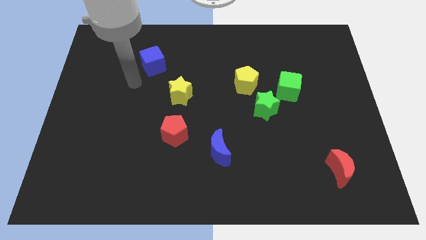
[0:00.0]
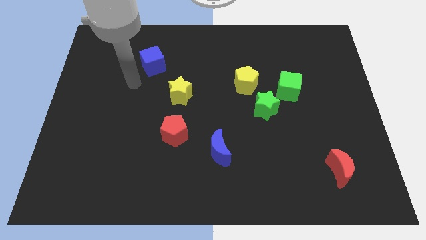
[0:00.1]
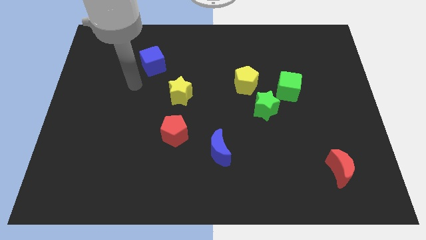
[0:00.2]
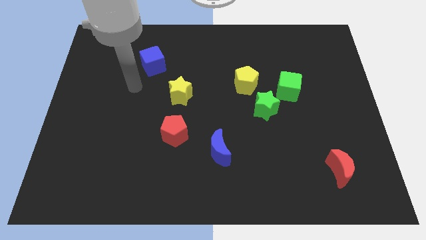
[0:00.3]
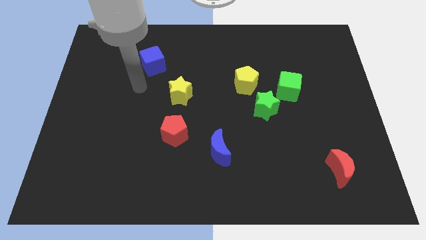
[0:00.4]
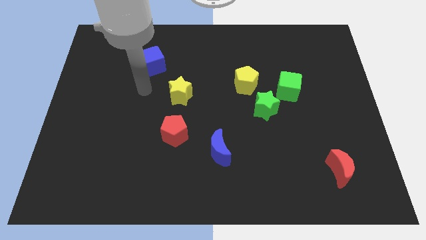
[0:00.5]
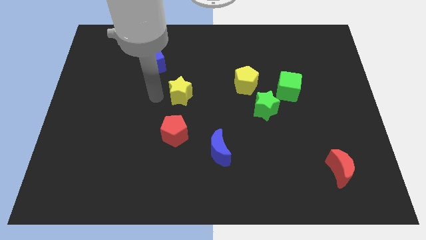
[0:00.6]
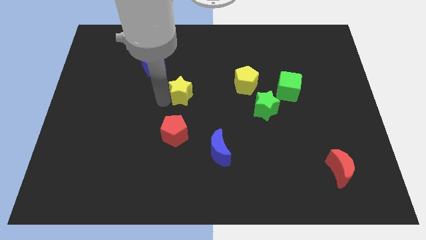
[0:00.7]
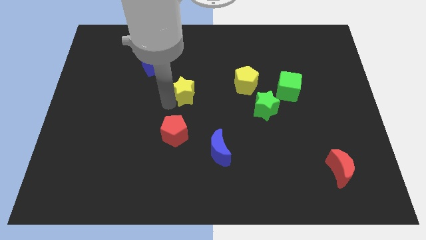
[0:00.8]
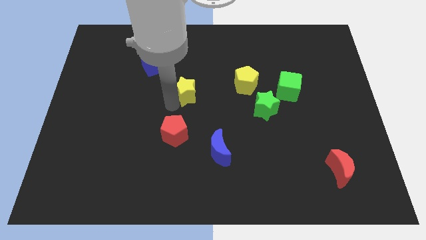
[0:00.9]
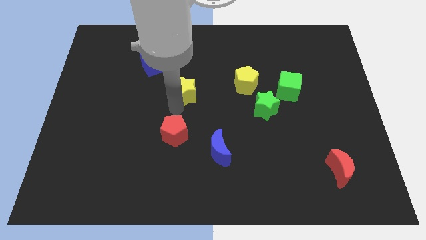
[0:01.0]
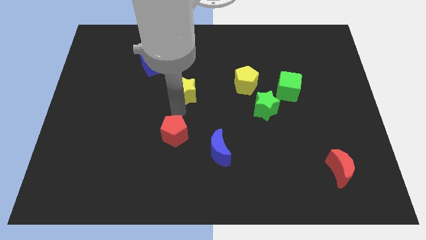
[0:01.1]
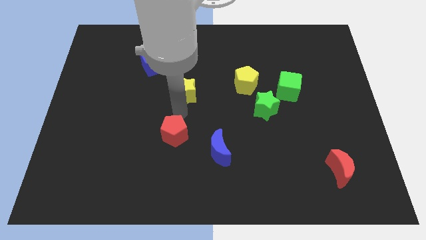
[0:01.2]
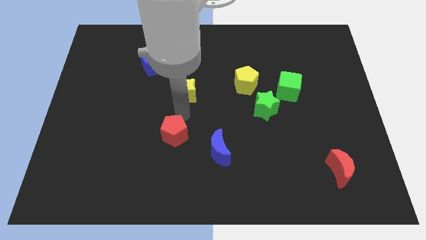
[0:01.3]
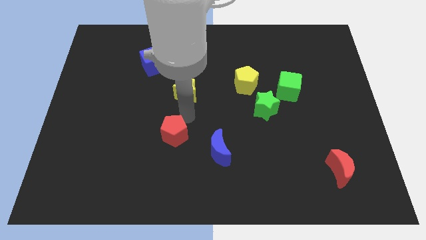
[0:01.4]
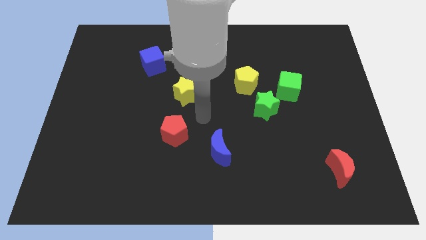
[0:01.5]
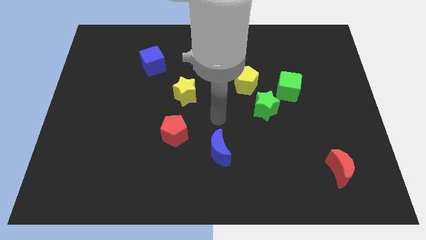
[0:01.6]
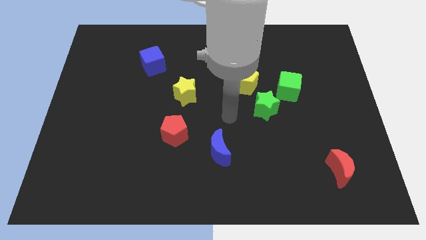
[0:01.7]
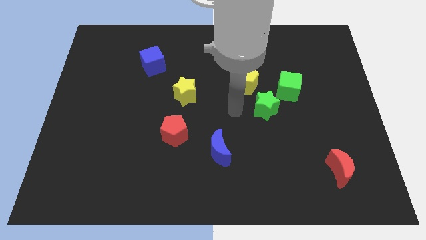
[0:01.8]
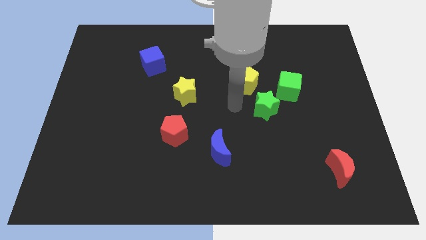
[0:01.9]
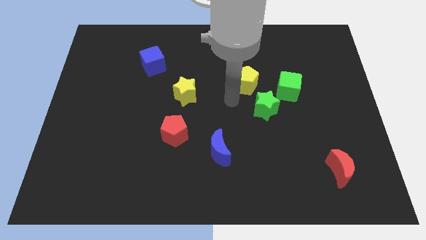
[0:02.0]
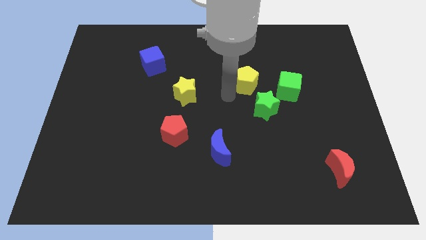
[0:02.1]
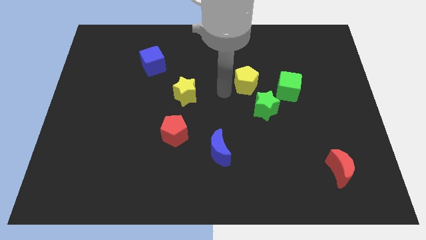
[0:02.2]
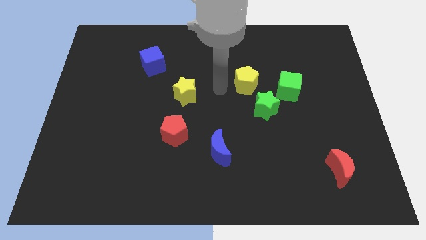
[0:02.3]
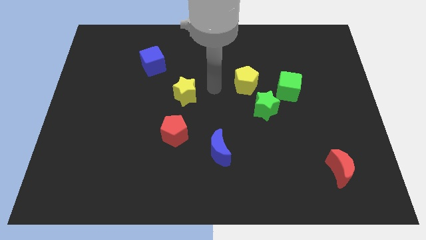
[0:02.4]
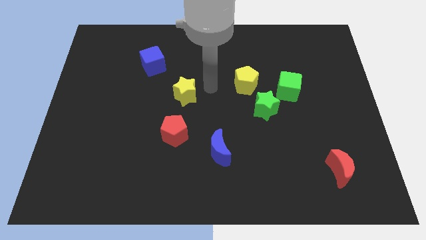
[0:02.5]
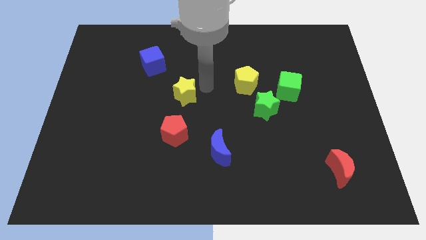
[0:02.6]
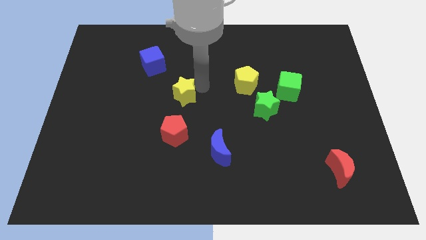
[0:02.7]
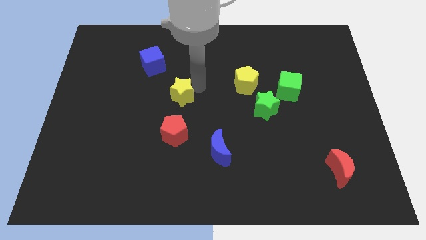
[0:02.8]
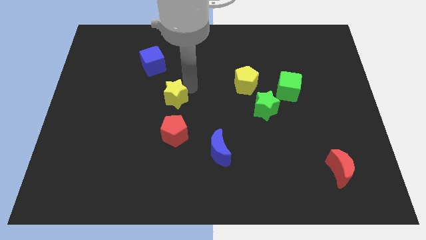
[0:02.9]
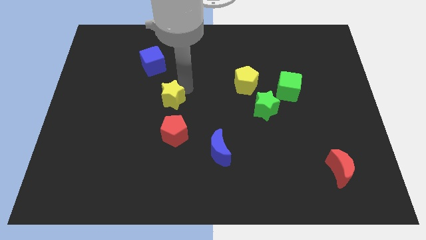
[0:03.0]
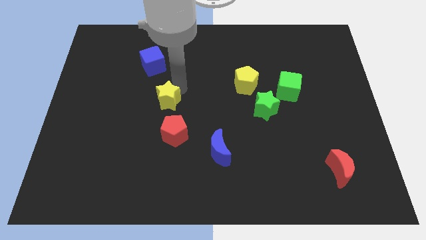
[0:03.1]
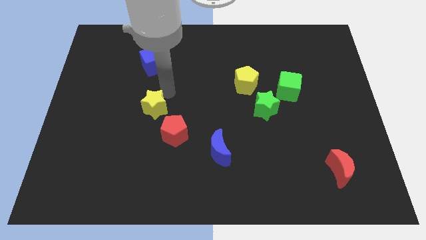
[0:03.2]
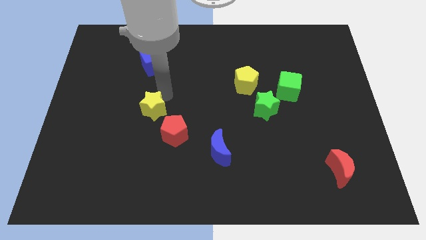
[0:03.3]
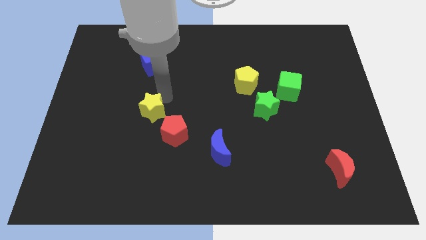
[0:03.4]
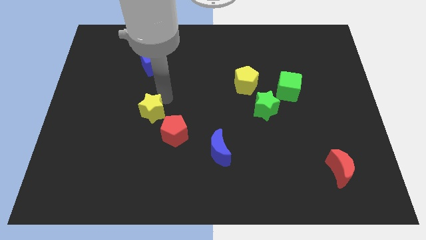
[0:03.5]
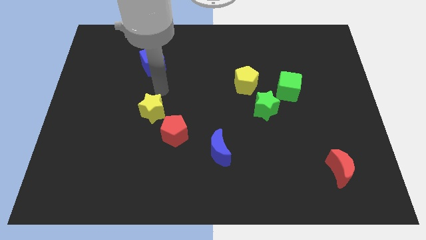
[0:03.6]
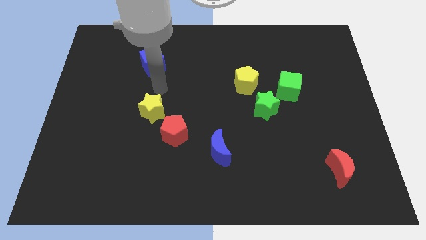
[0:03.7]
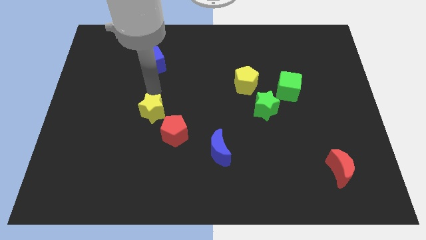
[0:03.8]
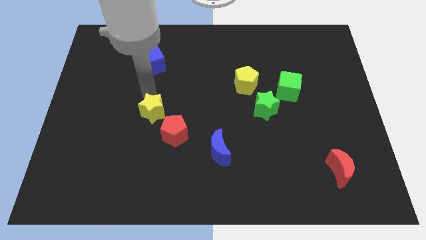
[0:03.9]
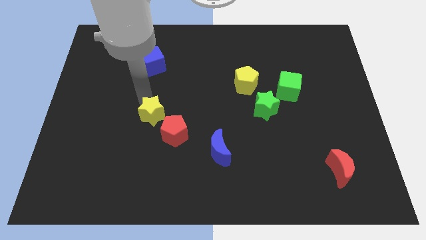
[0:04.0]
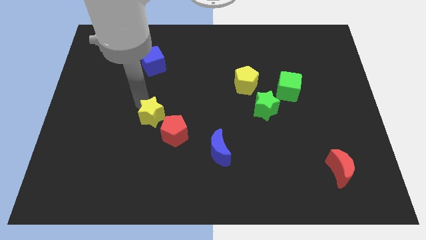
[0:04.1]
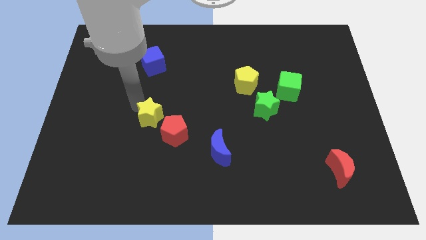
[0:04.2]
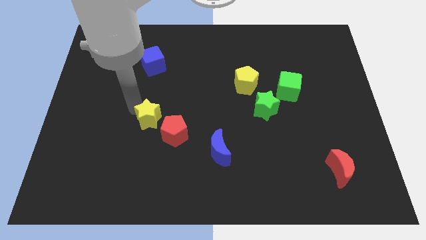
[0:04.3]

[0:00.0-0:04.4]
place the yellow star at the top left side of red pentagon

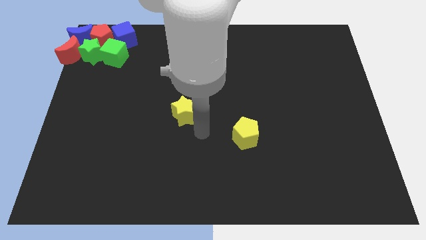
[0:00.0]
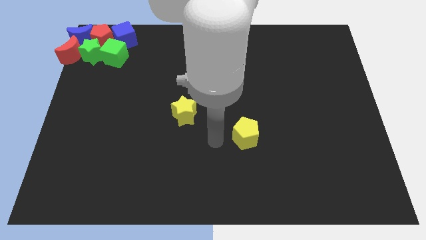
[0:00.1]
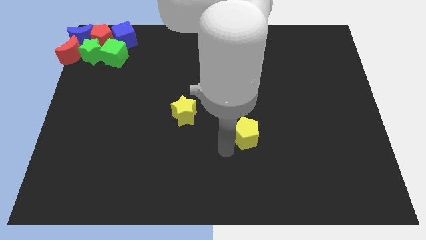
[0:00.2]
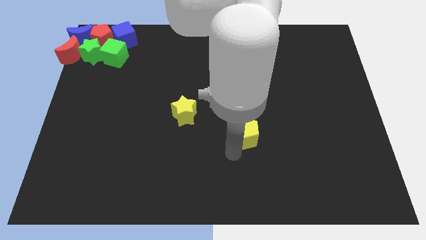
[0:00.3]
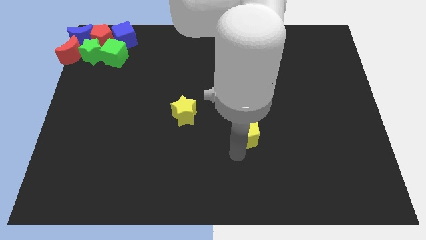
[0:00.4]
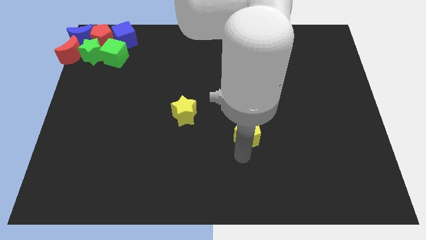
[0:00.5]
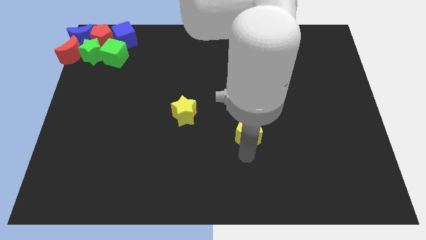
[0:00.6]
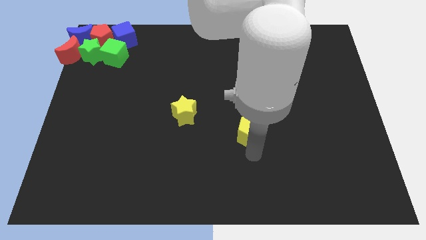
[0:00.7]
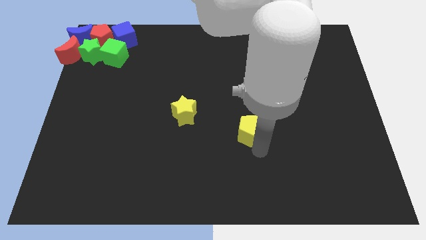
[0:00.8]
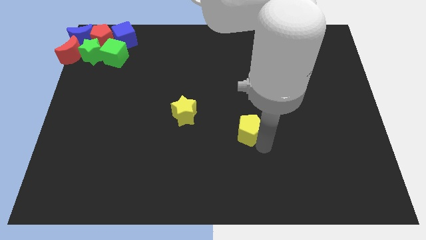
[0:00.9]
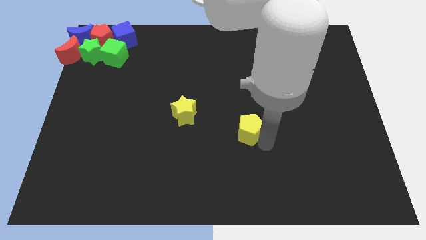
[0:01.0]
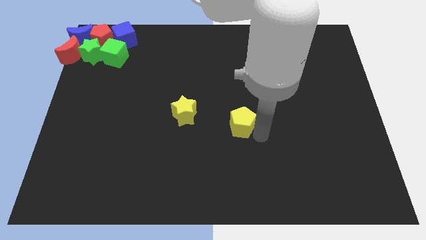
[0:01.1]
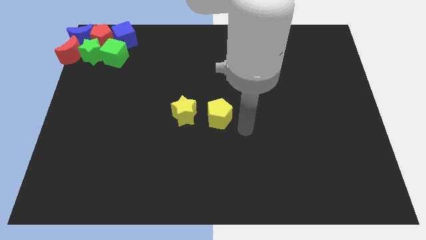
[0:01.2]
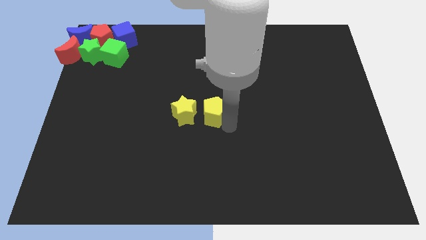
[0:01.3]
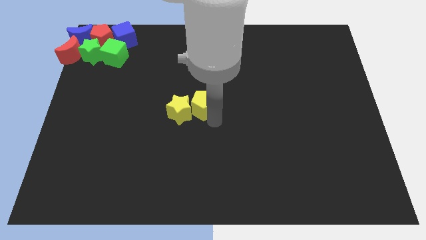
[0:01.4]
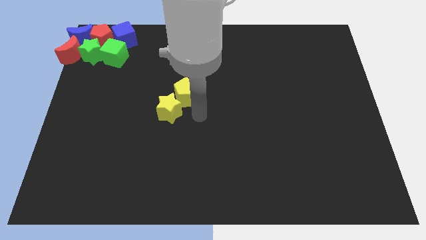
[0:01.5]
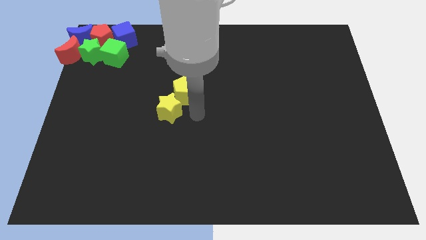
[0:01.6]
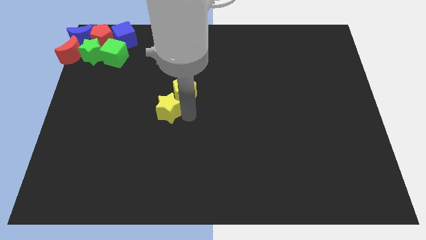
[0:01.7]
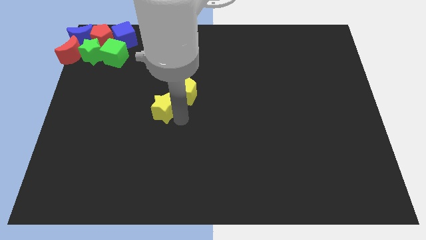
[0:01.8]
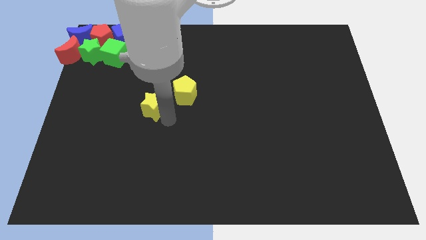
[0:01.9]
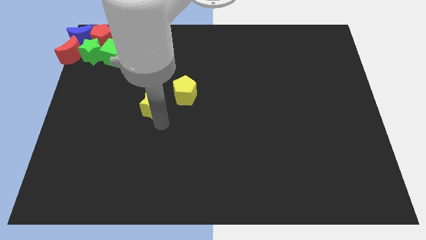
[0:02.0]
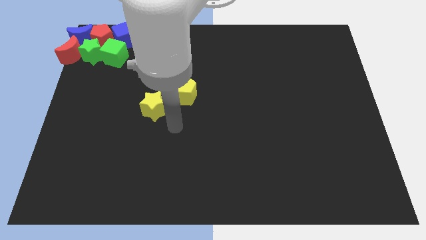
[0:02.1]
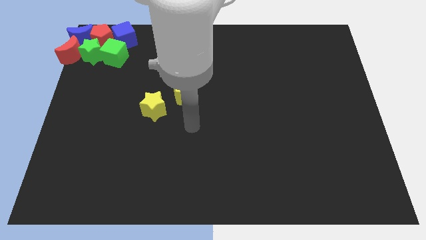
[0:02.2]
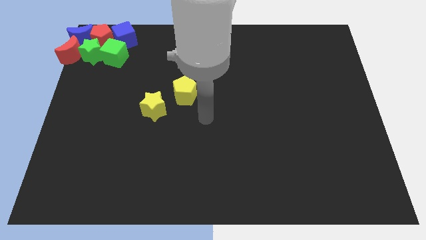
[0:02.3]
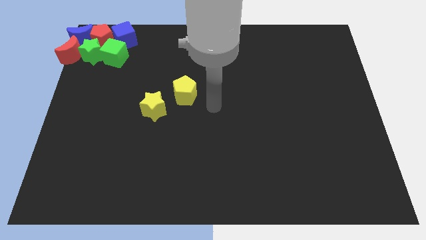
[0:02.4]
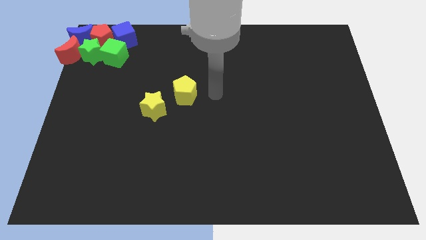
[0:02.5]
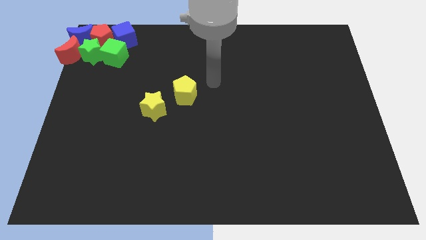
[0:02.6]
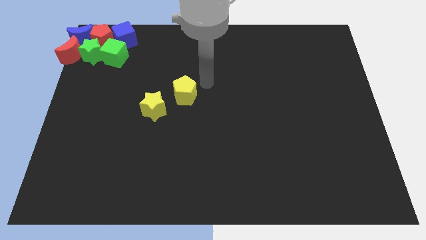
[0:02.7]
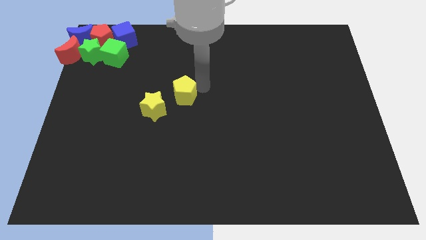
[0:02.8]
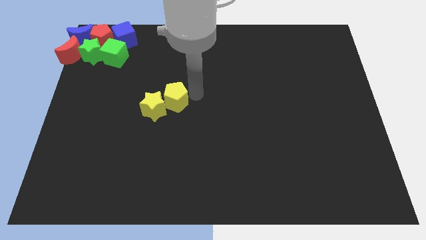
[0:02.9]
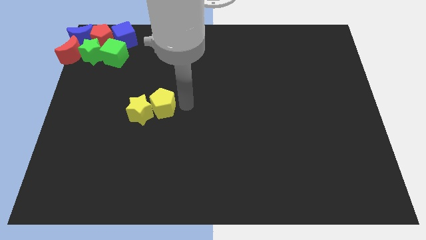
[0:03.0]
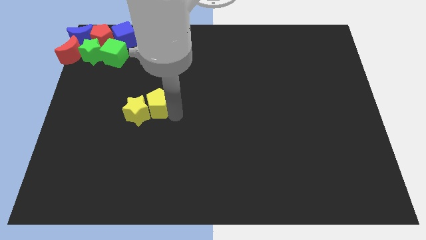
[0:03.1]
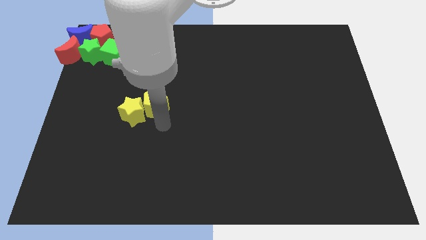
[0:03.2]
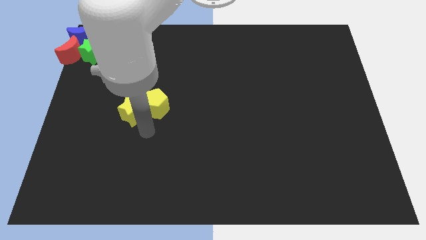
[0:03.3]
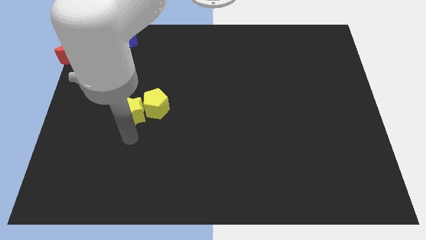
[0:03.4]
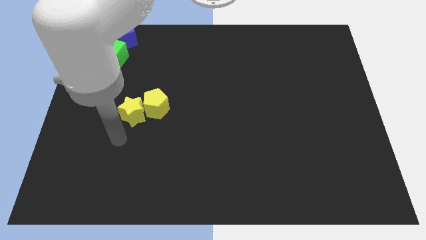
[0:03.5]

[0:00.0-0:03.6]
put yellow blocks together

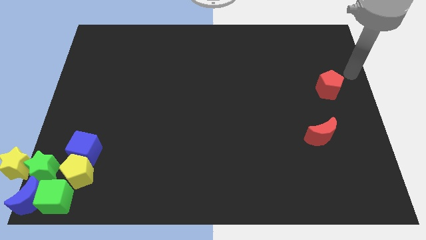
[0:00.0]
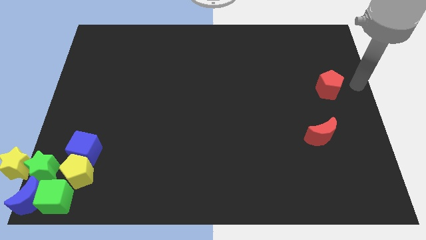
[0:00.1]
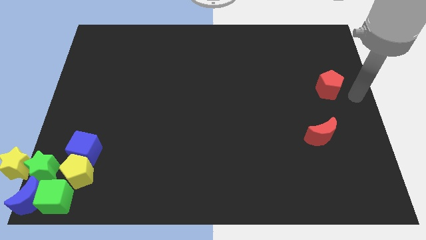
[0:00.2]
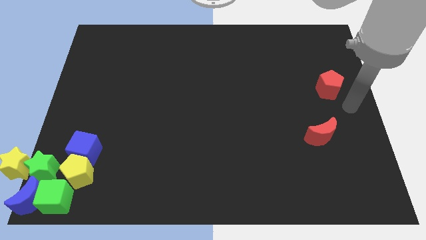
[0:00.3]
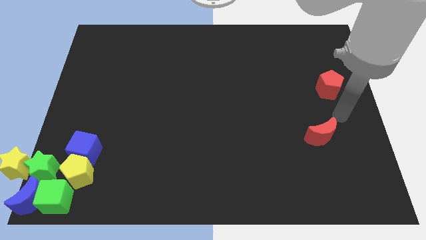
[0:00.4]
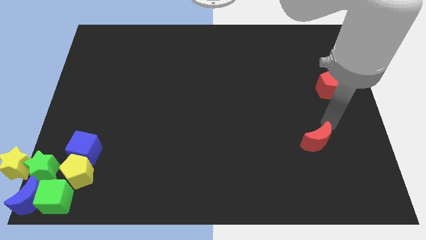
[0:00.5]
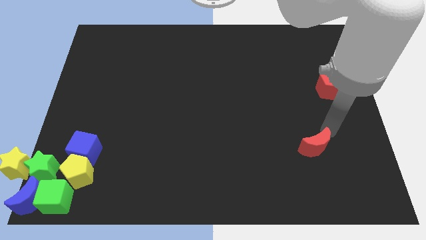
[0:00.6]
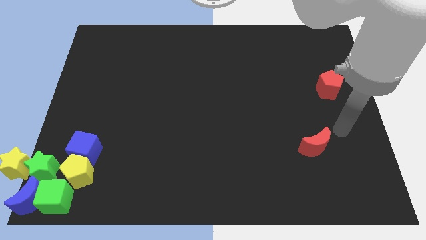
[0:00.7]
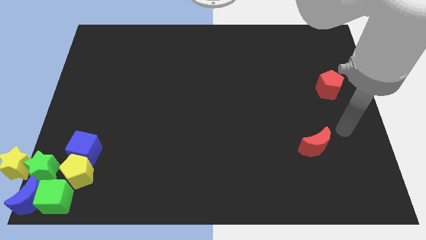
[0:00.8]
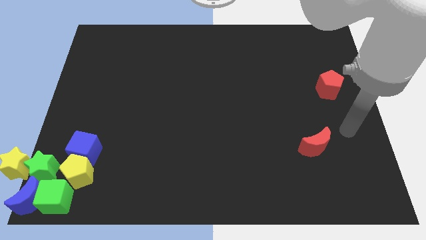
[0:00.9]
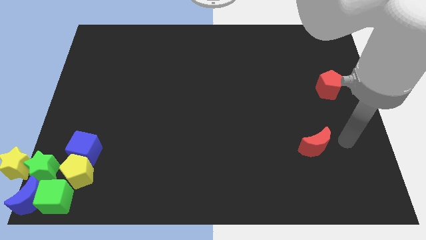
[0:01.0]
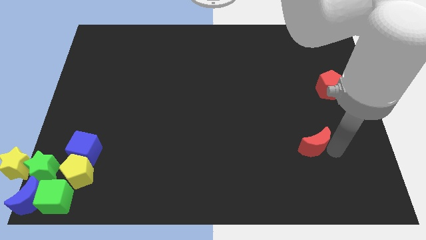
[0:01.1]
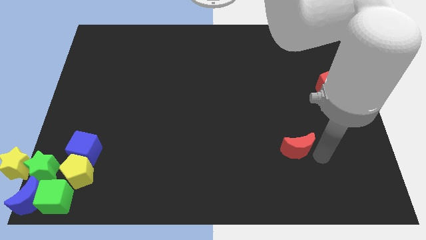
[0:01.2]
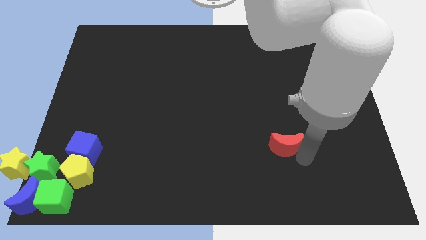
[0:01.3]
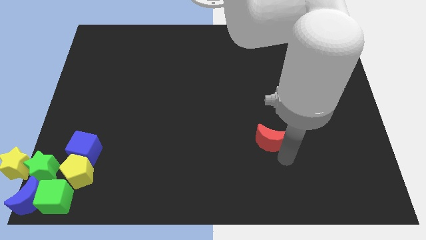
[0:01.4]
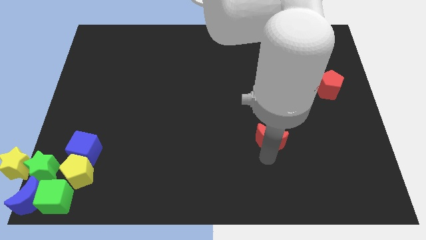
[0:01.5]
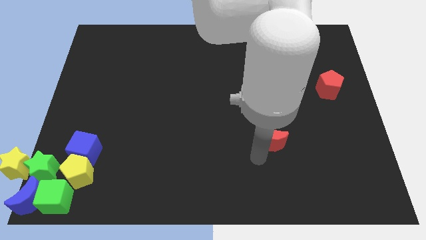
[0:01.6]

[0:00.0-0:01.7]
put the red moon diagonally bottom left to the red pentagon
